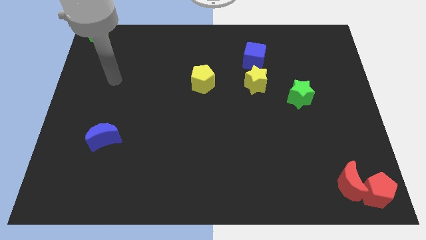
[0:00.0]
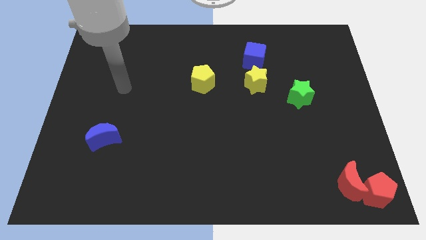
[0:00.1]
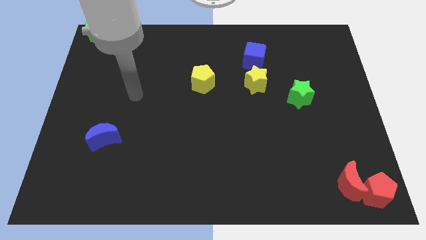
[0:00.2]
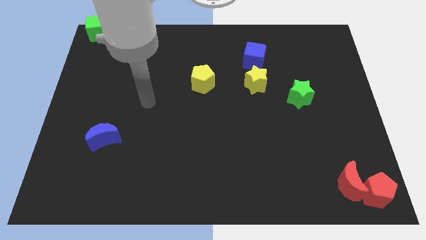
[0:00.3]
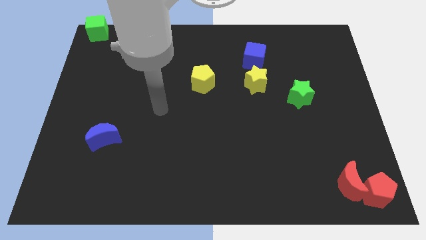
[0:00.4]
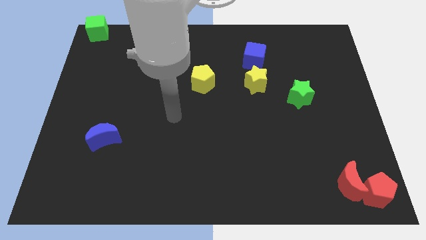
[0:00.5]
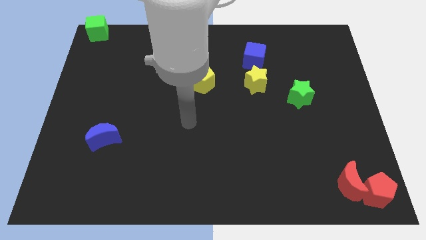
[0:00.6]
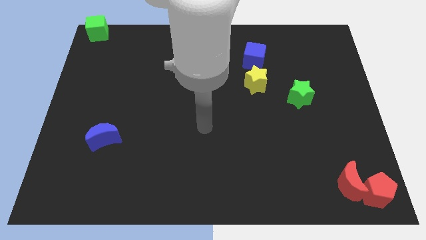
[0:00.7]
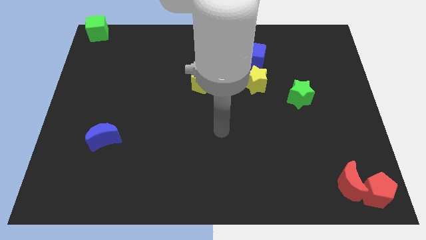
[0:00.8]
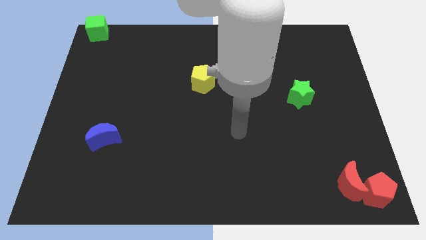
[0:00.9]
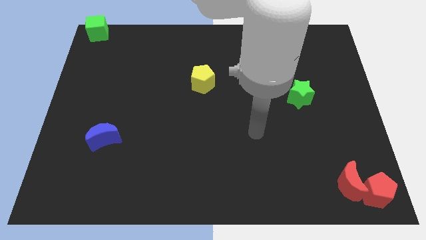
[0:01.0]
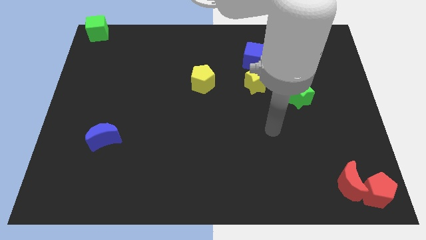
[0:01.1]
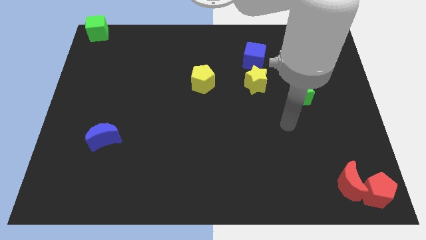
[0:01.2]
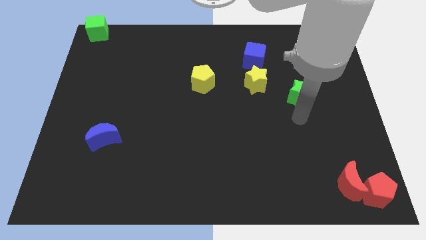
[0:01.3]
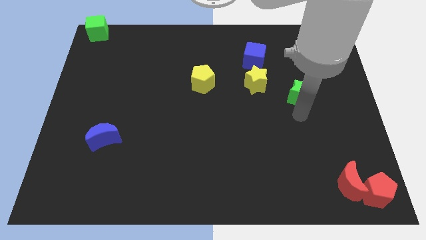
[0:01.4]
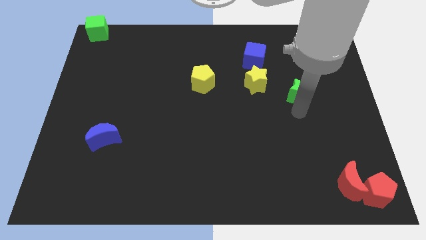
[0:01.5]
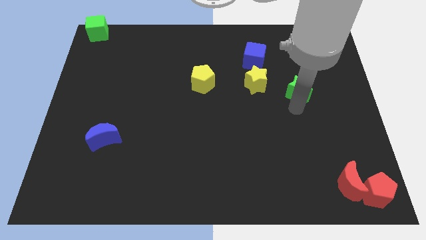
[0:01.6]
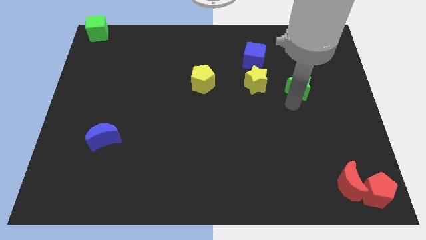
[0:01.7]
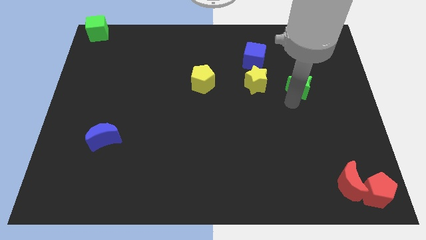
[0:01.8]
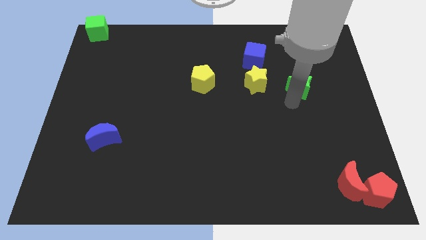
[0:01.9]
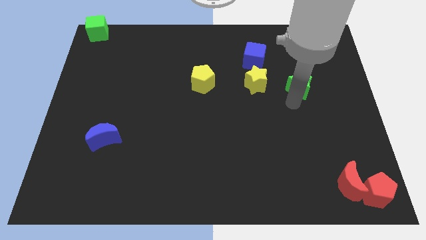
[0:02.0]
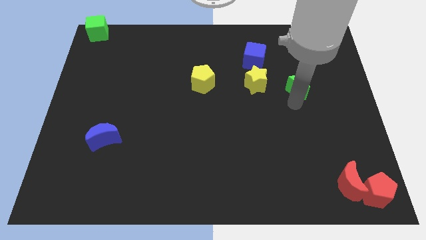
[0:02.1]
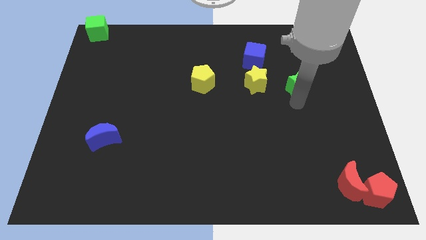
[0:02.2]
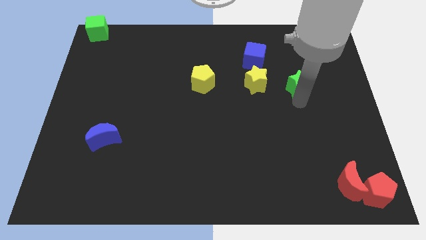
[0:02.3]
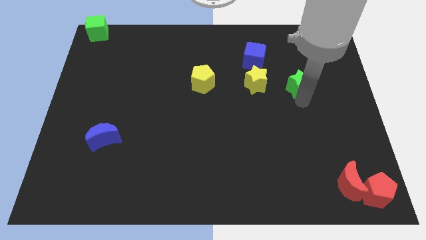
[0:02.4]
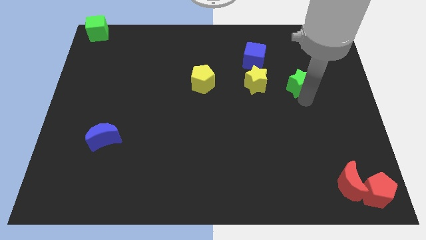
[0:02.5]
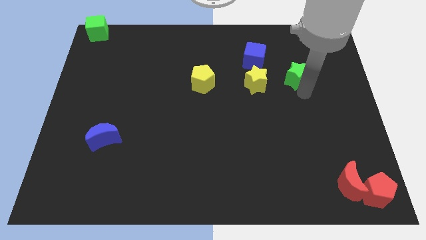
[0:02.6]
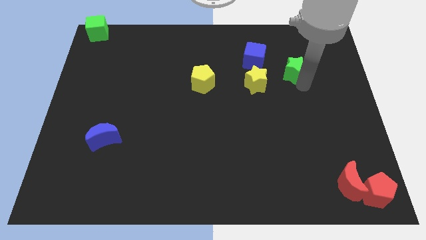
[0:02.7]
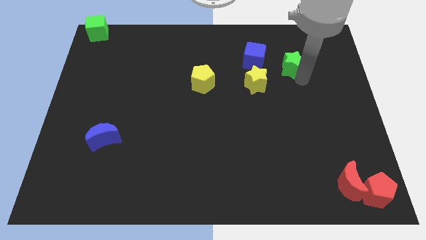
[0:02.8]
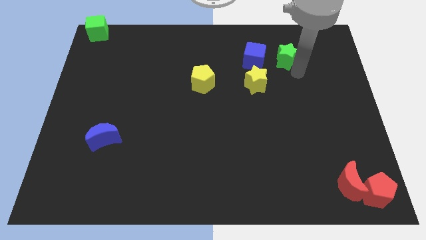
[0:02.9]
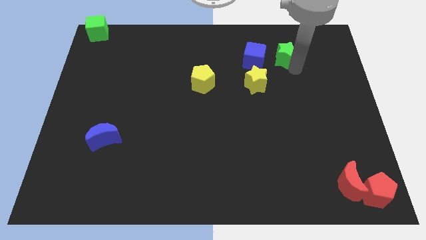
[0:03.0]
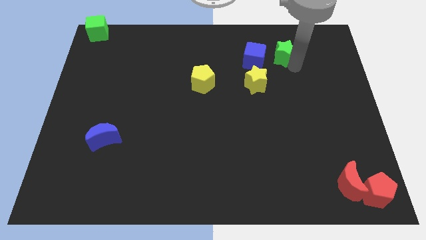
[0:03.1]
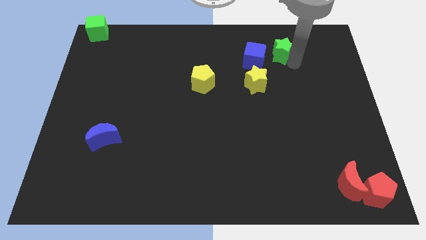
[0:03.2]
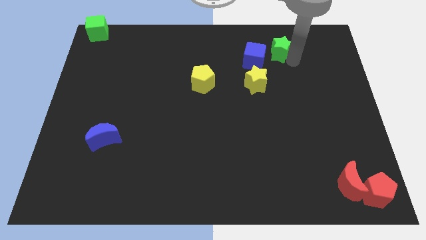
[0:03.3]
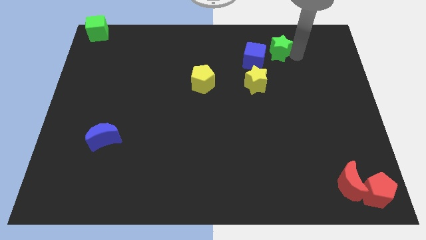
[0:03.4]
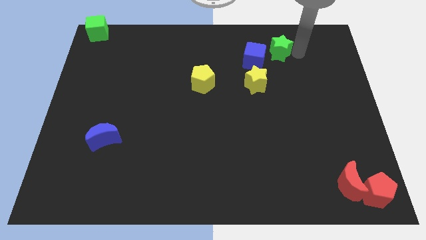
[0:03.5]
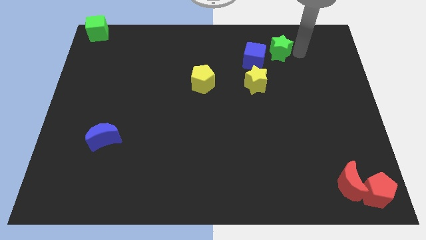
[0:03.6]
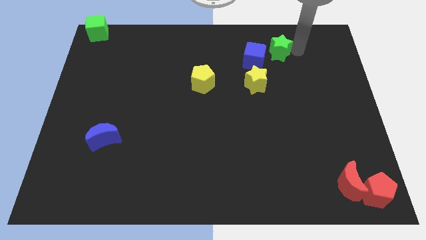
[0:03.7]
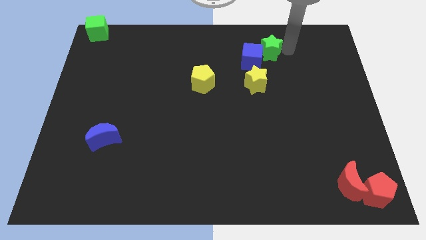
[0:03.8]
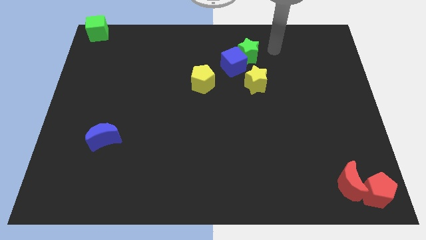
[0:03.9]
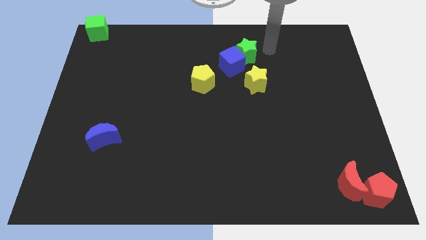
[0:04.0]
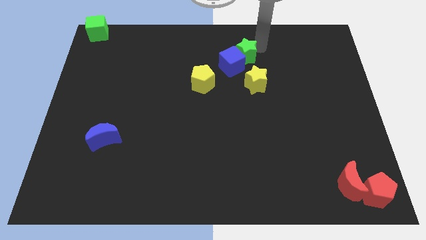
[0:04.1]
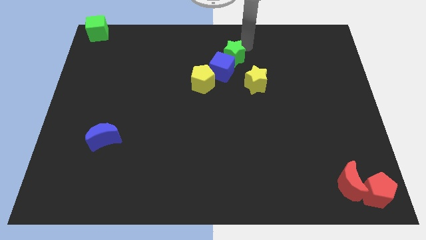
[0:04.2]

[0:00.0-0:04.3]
move the green star into the blue cube

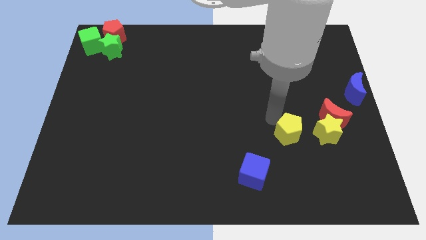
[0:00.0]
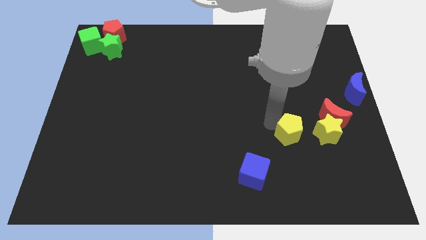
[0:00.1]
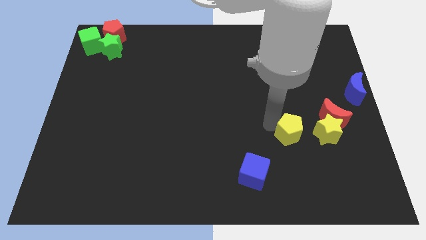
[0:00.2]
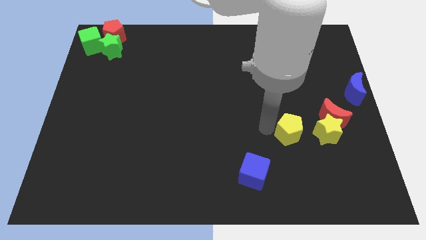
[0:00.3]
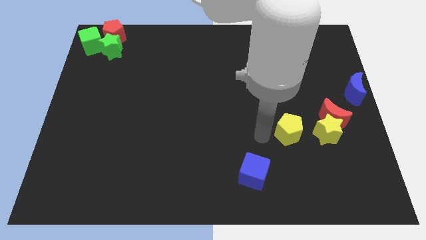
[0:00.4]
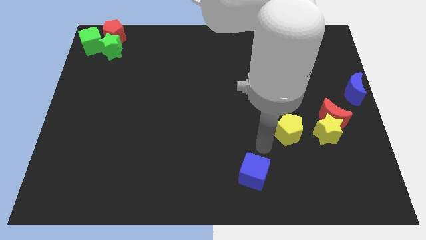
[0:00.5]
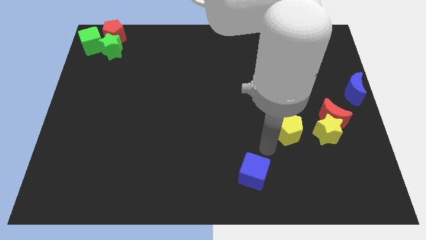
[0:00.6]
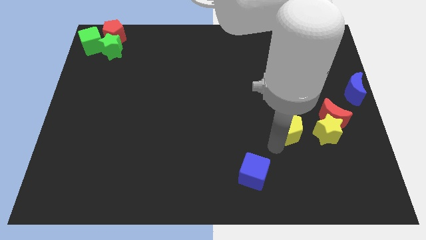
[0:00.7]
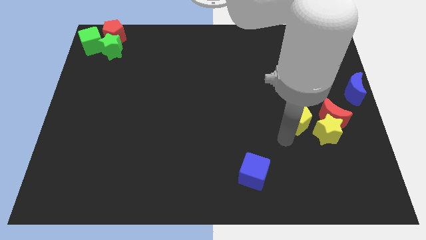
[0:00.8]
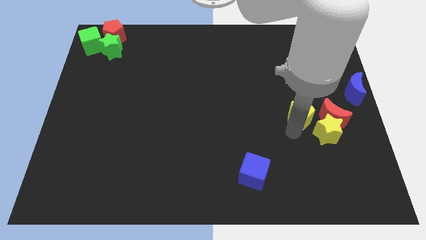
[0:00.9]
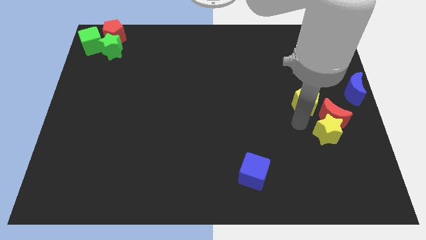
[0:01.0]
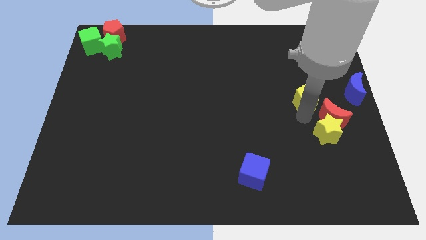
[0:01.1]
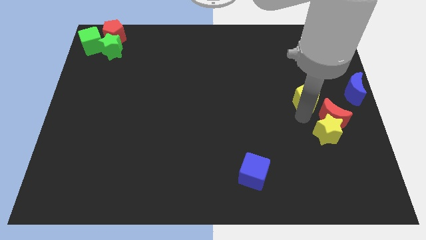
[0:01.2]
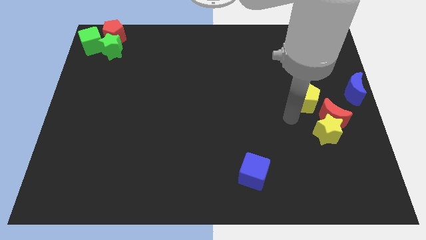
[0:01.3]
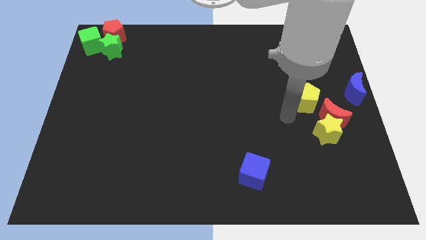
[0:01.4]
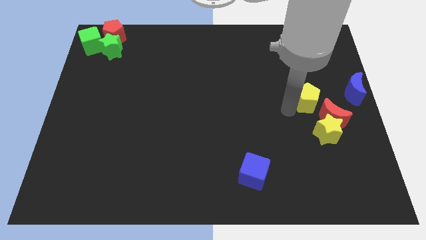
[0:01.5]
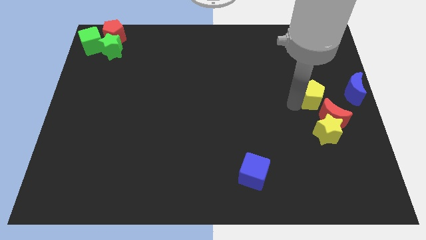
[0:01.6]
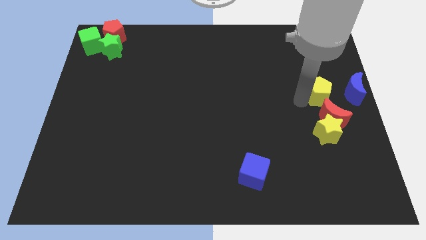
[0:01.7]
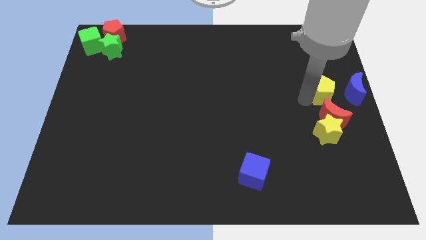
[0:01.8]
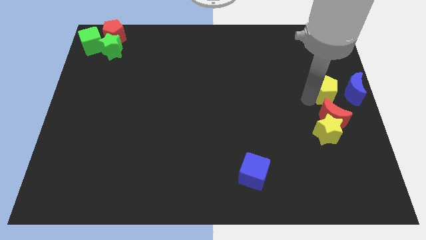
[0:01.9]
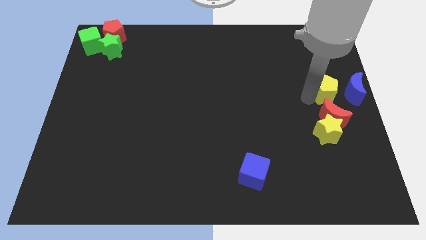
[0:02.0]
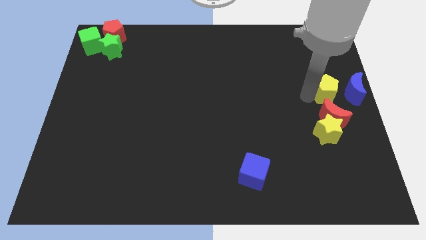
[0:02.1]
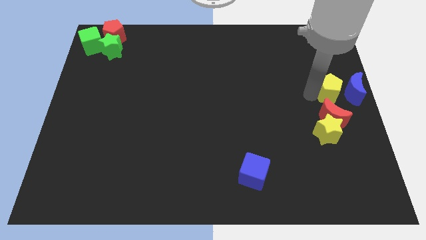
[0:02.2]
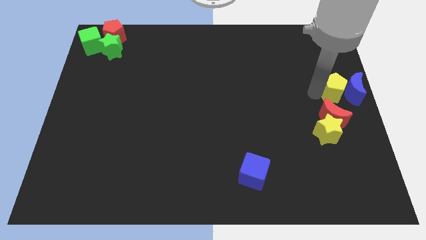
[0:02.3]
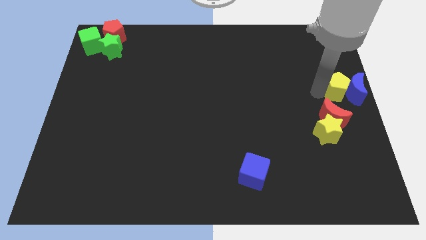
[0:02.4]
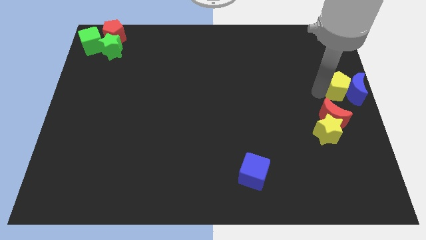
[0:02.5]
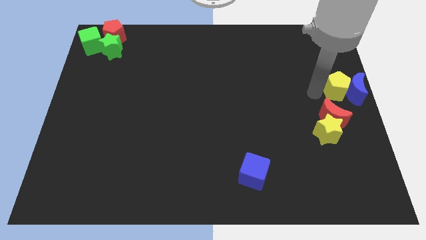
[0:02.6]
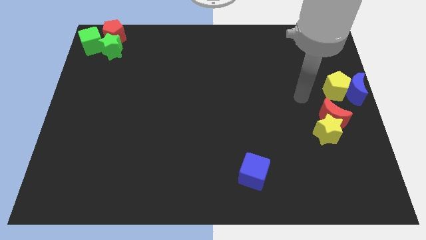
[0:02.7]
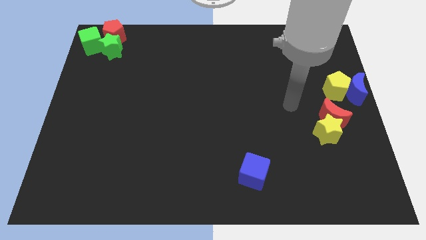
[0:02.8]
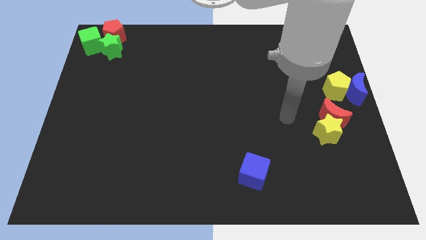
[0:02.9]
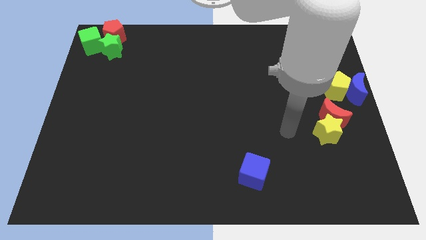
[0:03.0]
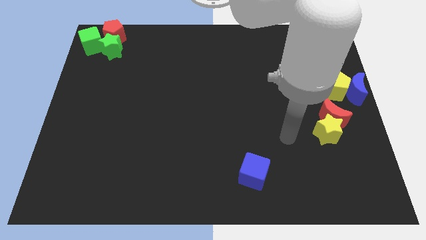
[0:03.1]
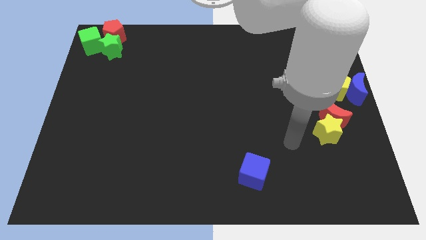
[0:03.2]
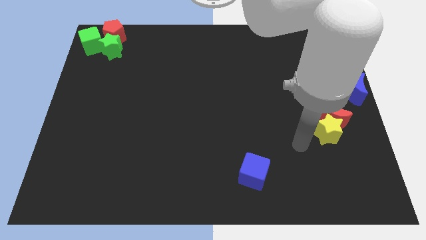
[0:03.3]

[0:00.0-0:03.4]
slide the yellow pentagon into the blue moon

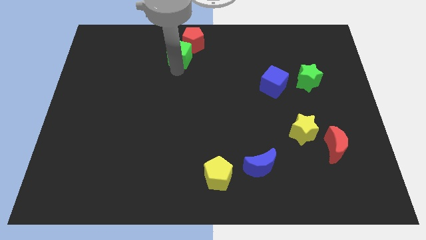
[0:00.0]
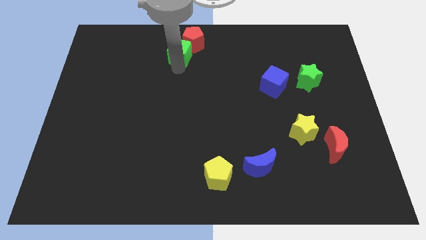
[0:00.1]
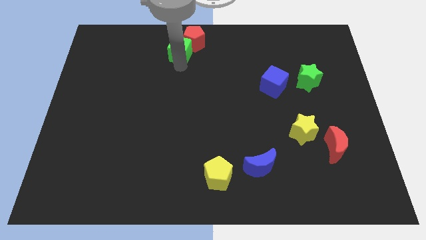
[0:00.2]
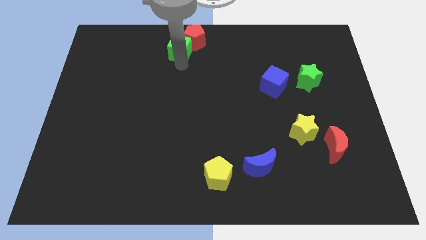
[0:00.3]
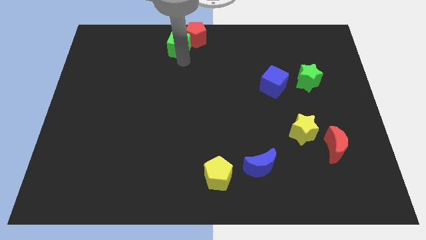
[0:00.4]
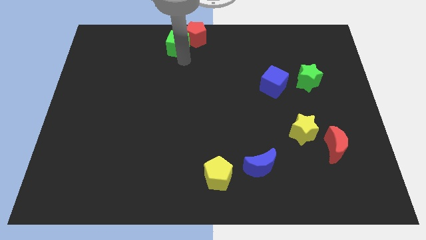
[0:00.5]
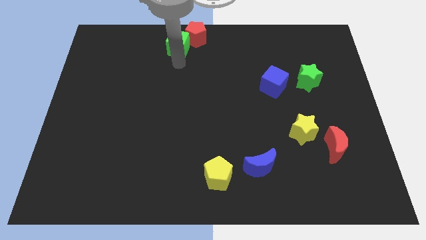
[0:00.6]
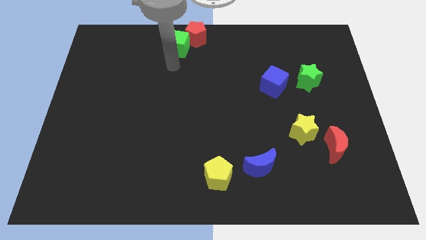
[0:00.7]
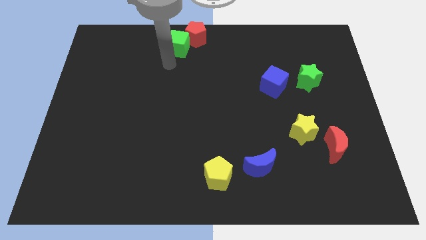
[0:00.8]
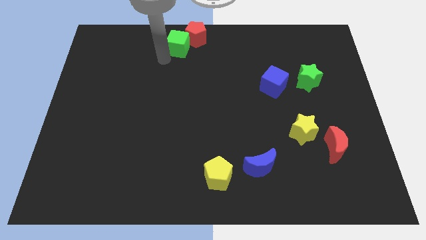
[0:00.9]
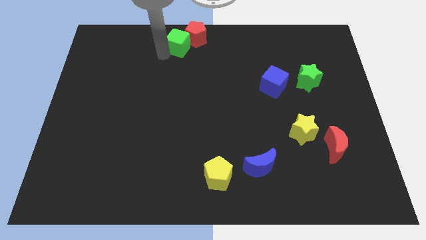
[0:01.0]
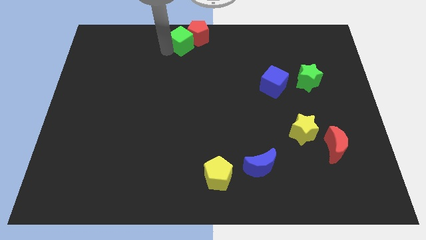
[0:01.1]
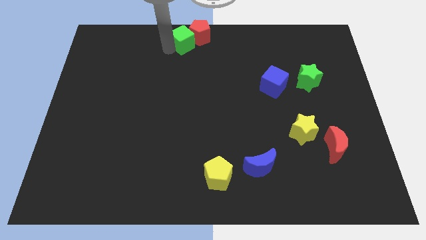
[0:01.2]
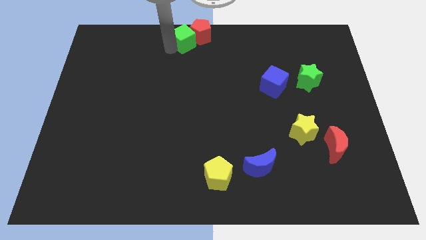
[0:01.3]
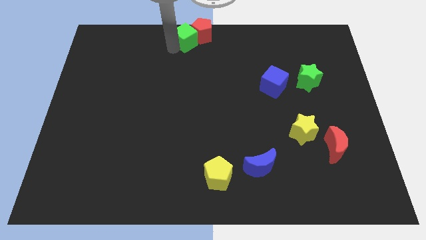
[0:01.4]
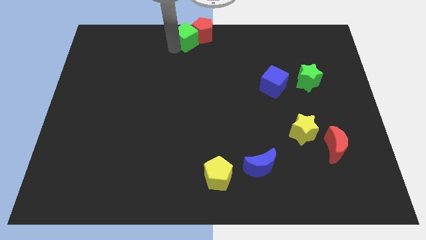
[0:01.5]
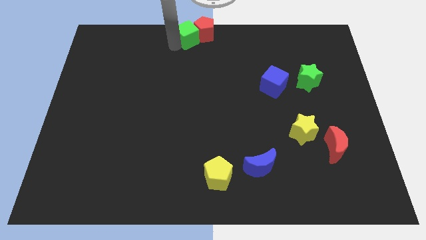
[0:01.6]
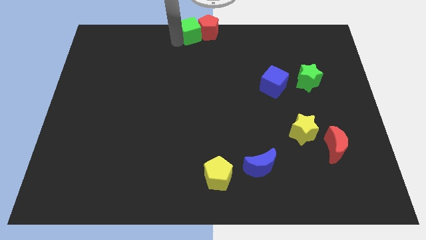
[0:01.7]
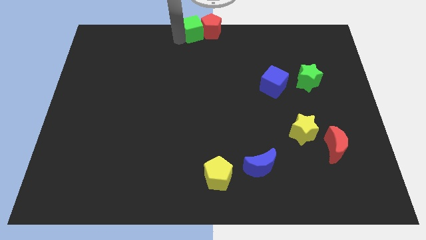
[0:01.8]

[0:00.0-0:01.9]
push the green cube along with the red pentagon to the top center of the board
